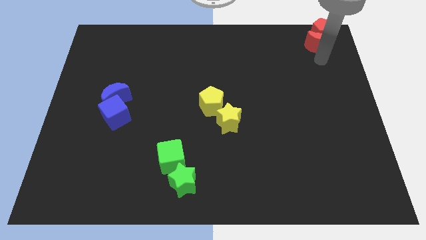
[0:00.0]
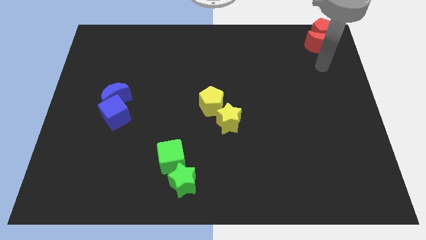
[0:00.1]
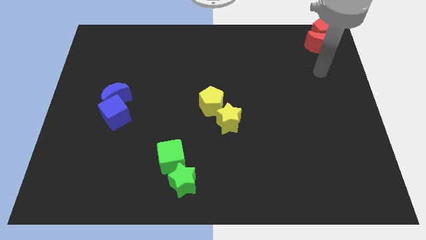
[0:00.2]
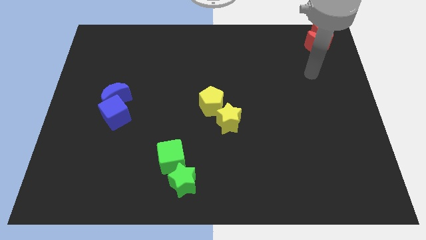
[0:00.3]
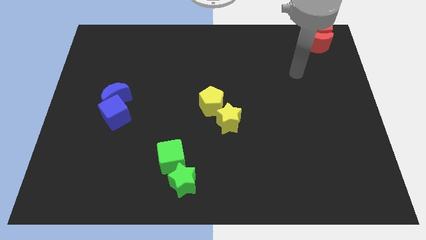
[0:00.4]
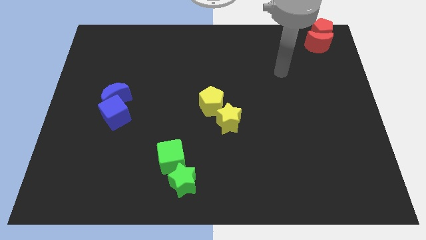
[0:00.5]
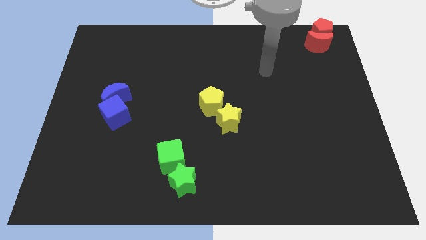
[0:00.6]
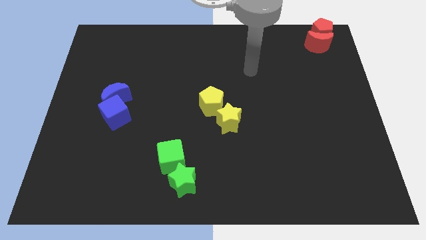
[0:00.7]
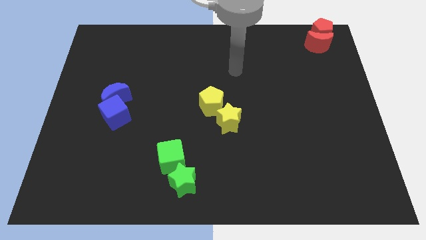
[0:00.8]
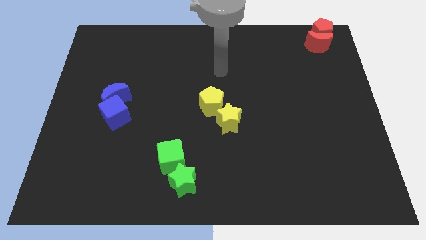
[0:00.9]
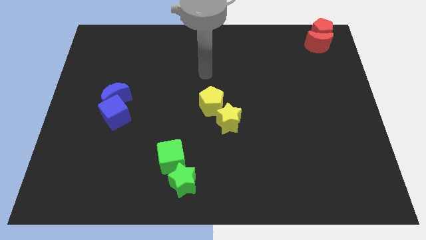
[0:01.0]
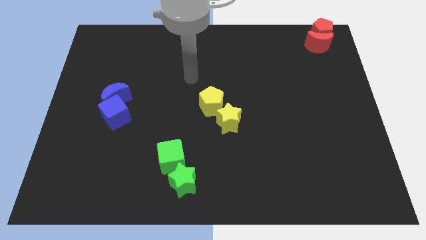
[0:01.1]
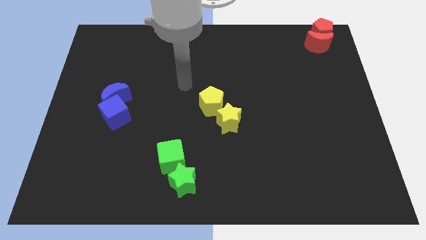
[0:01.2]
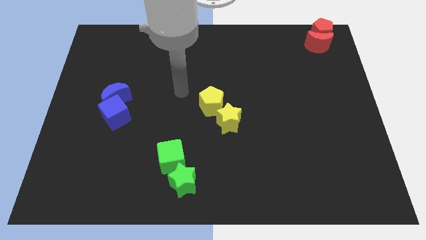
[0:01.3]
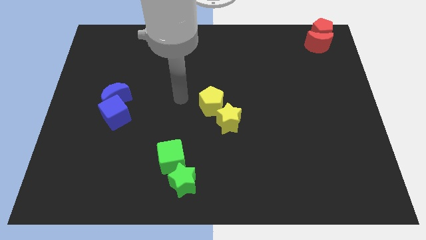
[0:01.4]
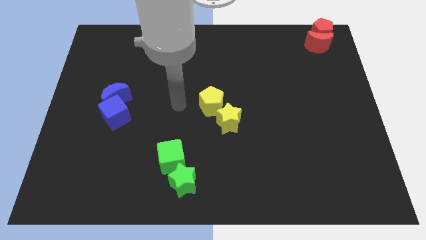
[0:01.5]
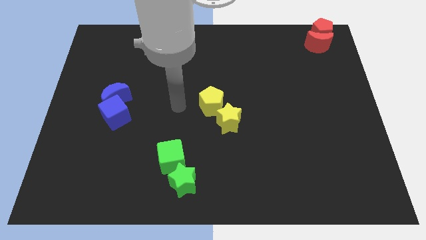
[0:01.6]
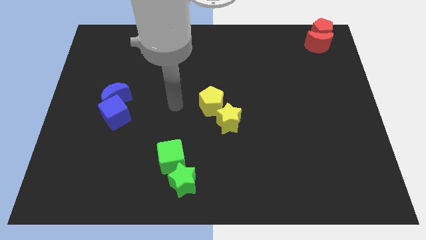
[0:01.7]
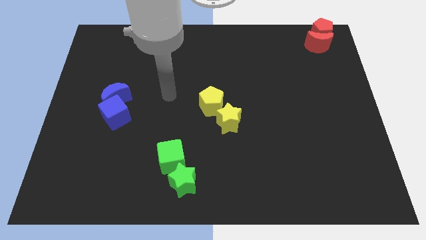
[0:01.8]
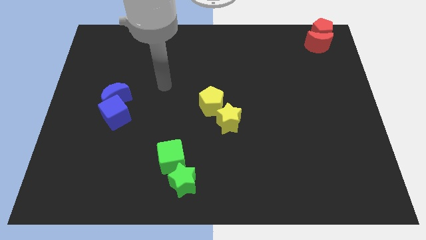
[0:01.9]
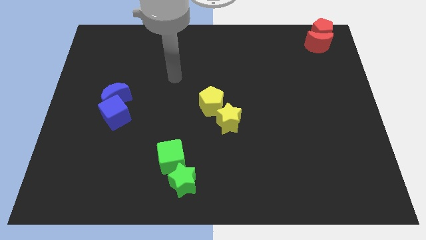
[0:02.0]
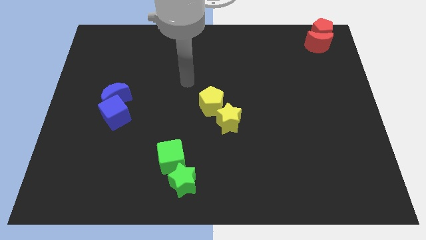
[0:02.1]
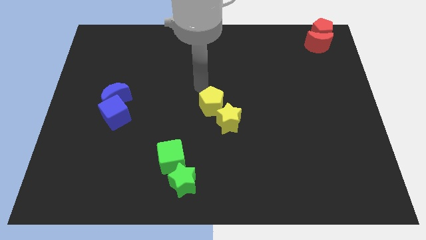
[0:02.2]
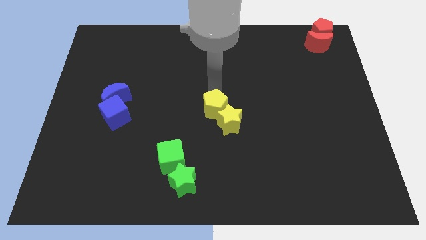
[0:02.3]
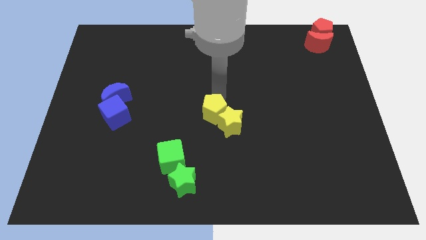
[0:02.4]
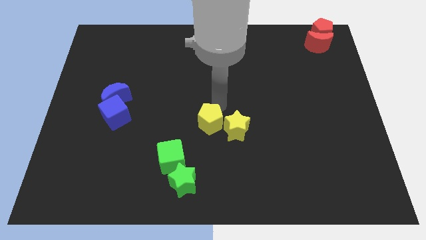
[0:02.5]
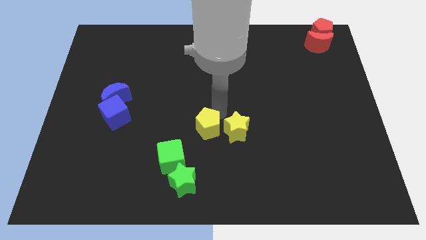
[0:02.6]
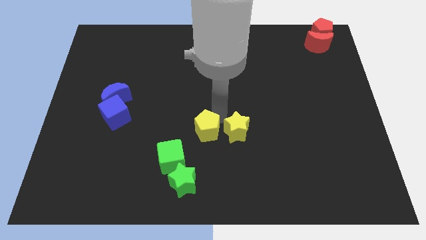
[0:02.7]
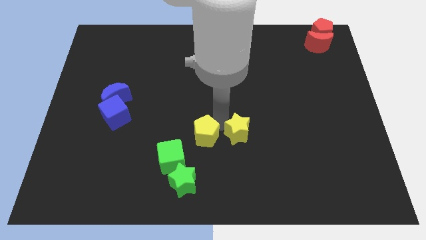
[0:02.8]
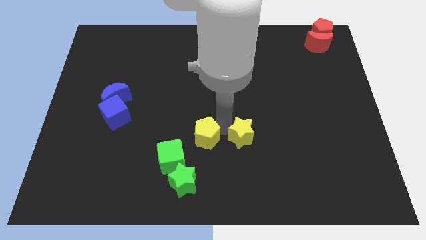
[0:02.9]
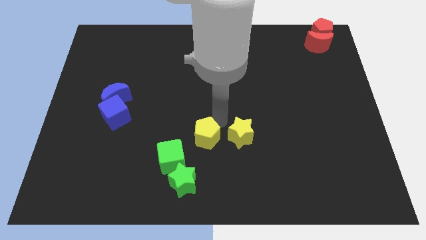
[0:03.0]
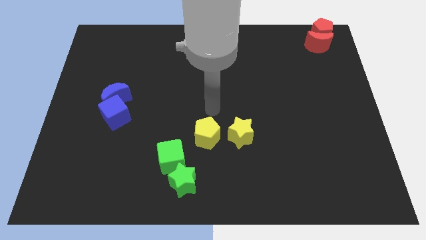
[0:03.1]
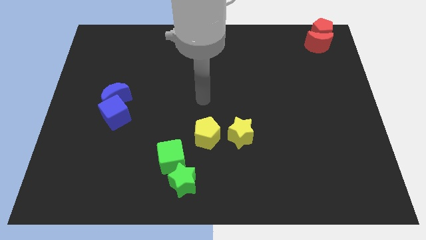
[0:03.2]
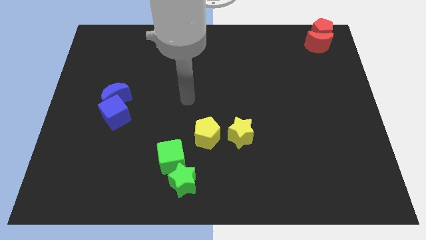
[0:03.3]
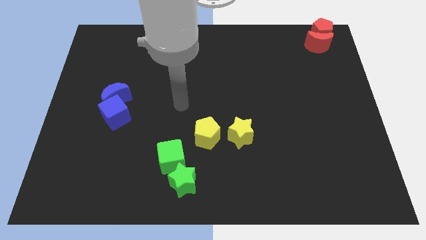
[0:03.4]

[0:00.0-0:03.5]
move the yellow blocks slightly to the bottom

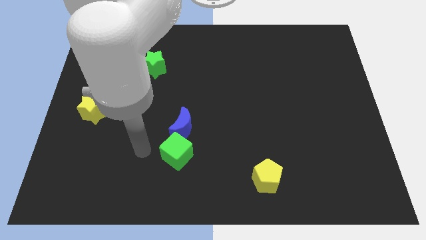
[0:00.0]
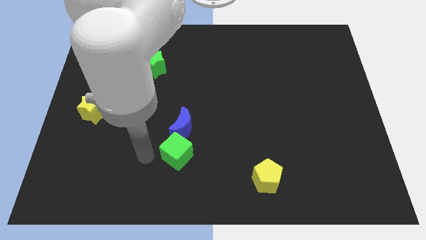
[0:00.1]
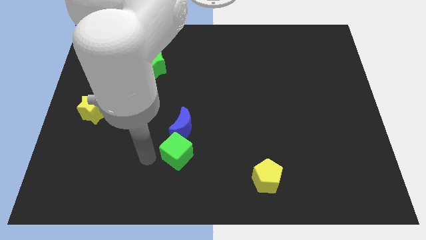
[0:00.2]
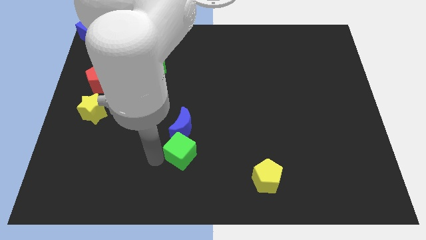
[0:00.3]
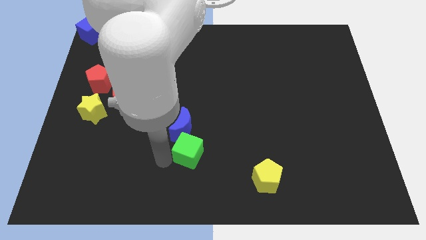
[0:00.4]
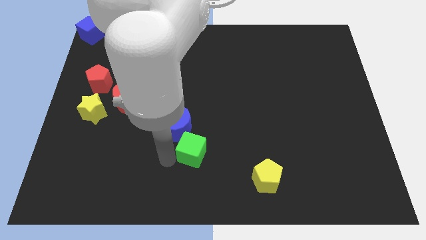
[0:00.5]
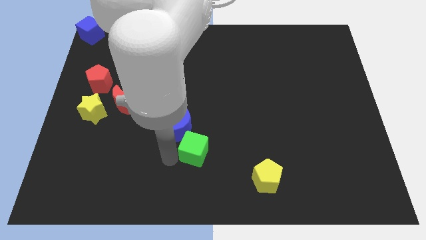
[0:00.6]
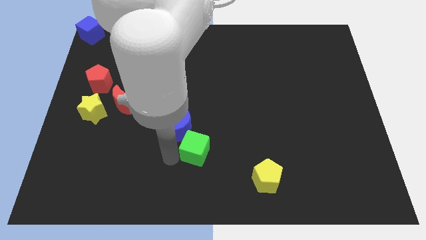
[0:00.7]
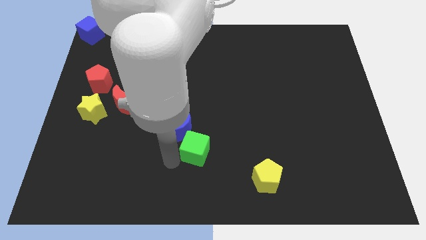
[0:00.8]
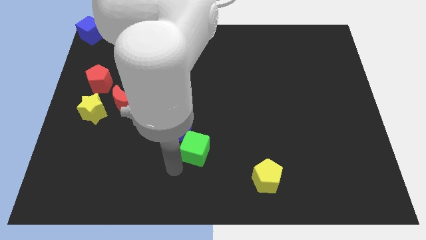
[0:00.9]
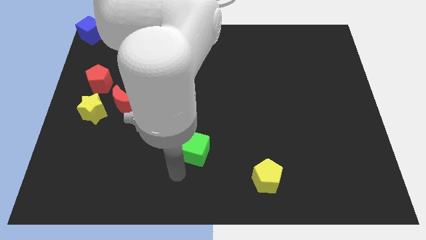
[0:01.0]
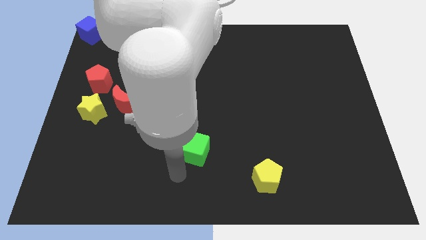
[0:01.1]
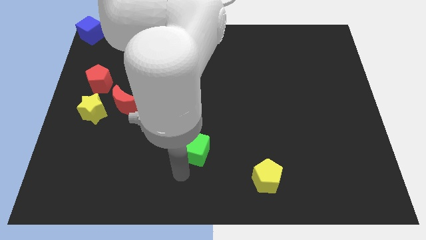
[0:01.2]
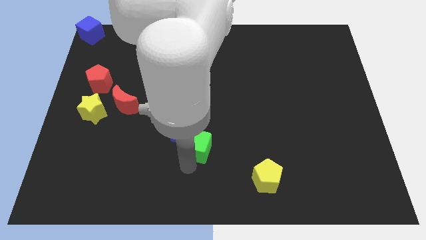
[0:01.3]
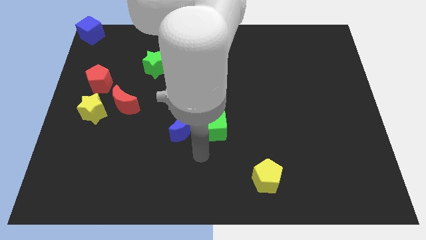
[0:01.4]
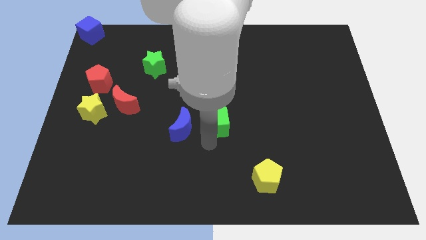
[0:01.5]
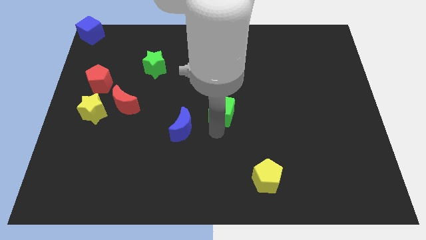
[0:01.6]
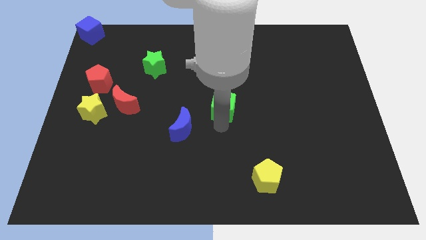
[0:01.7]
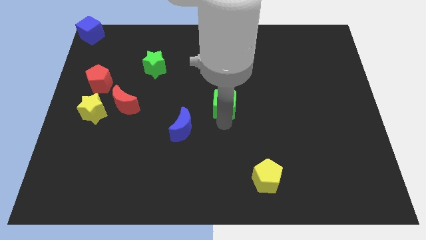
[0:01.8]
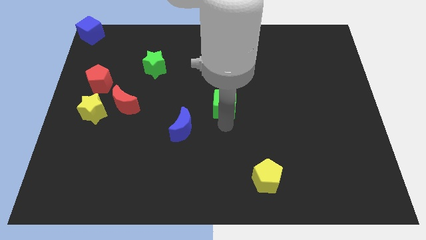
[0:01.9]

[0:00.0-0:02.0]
push the green cube to the top of the board

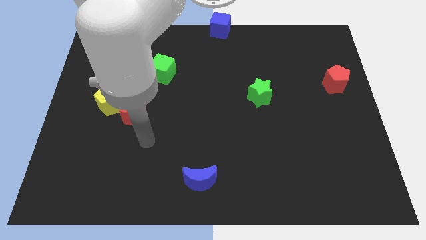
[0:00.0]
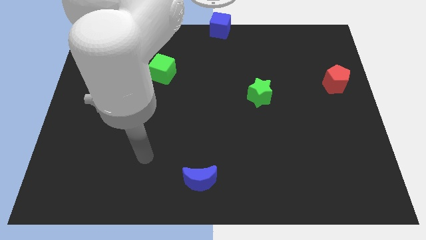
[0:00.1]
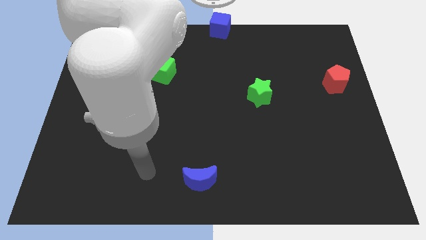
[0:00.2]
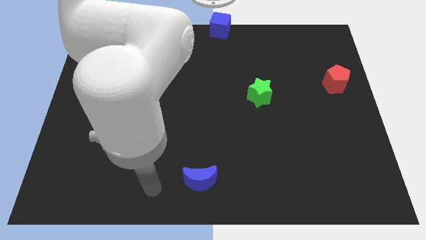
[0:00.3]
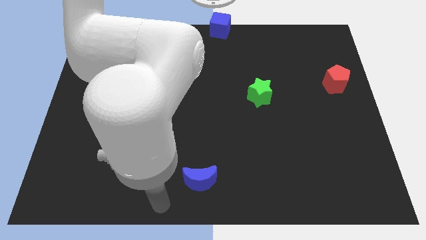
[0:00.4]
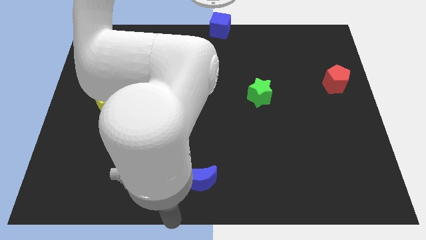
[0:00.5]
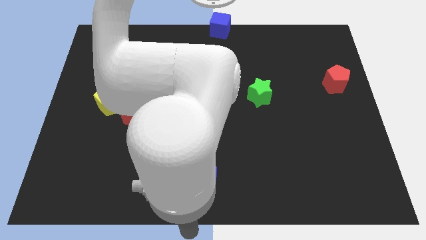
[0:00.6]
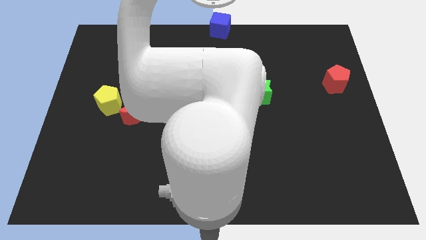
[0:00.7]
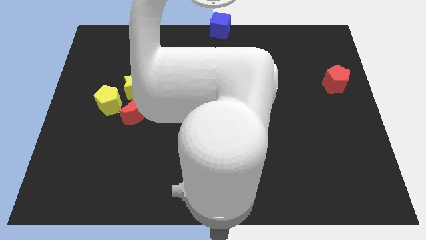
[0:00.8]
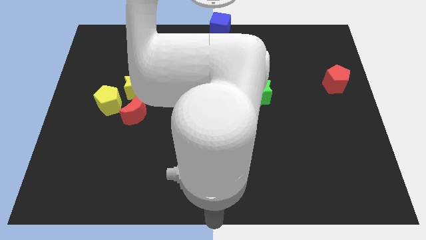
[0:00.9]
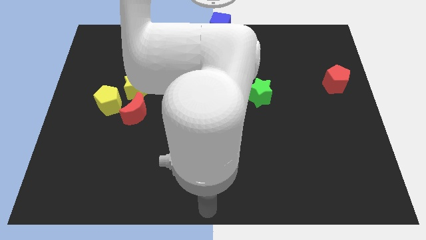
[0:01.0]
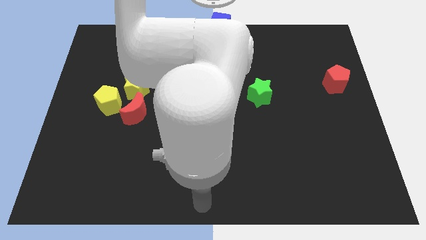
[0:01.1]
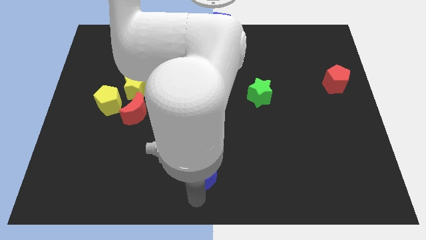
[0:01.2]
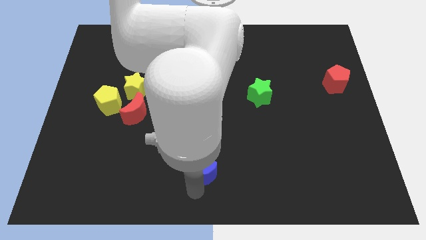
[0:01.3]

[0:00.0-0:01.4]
tap the blue crescent

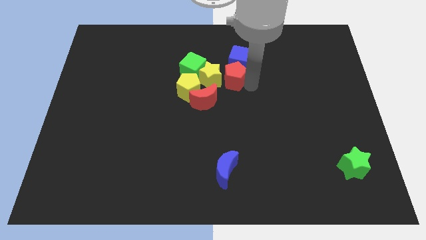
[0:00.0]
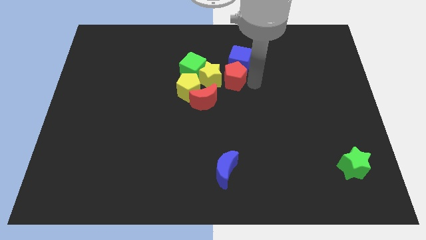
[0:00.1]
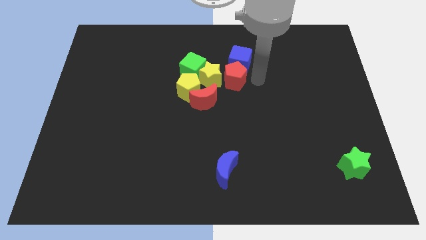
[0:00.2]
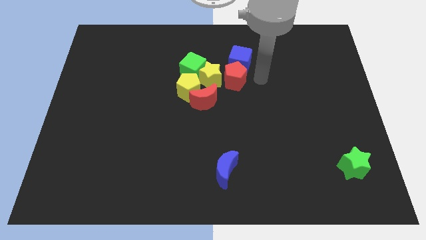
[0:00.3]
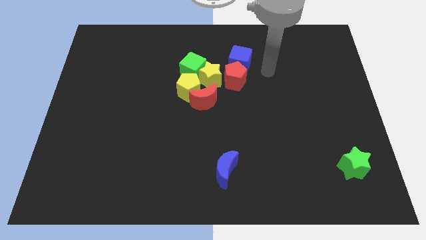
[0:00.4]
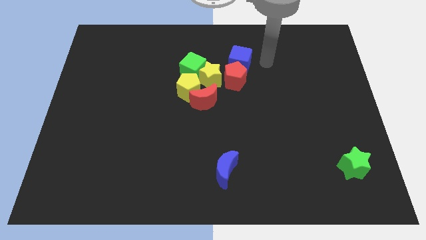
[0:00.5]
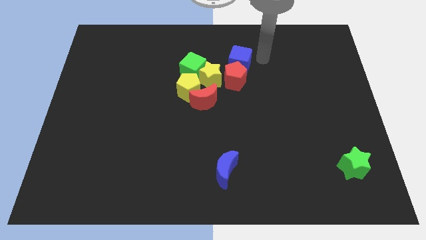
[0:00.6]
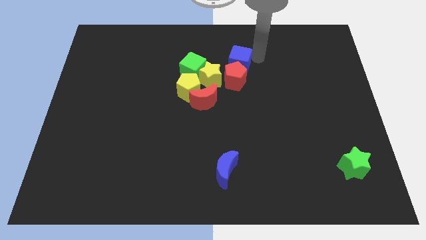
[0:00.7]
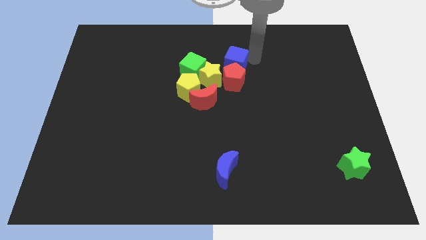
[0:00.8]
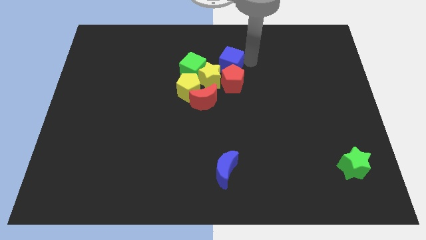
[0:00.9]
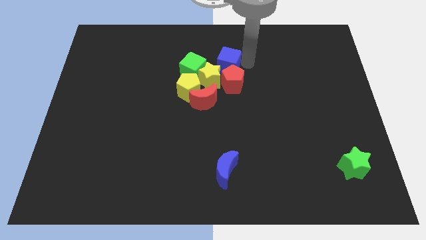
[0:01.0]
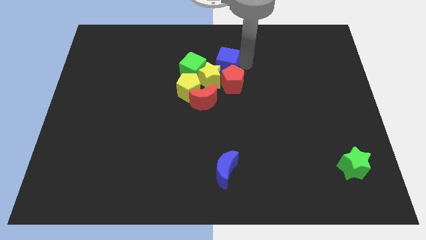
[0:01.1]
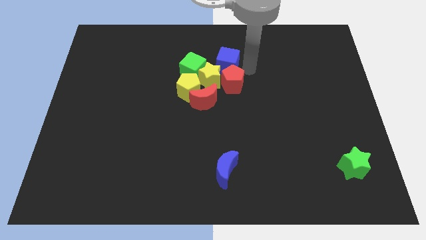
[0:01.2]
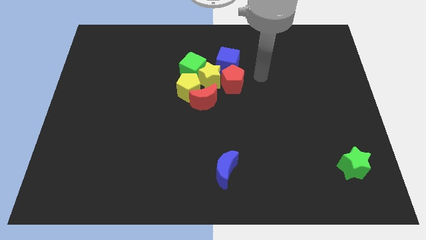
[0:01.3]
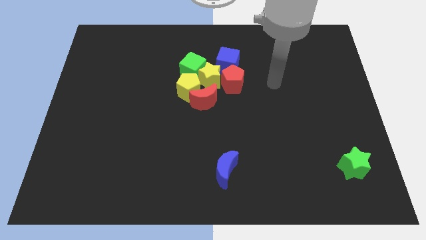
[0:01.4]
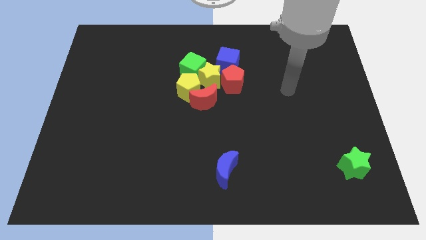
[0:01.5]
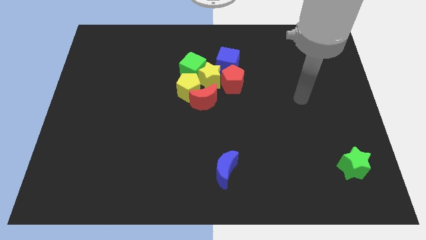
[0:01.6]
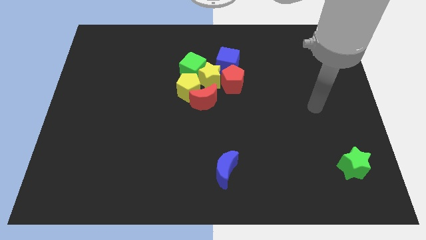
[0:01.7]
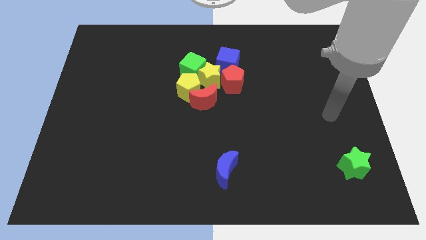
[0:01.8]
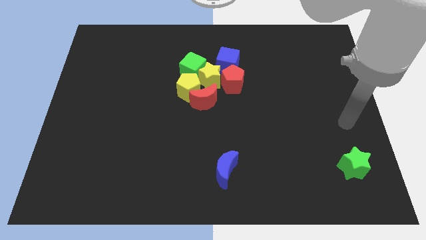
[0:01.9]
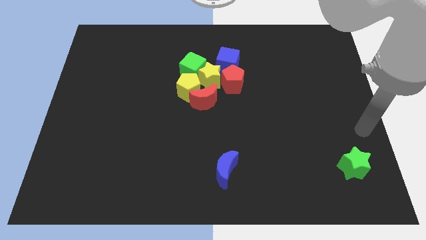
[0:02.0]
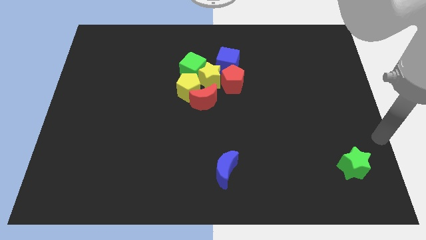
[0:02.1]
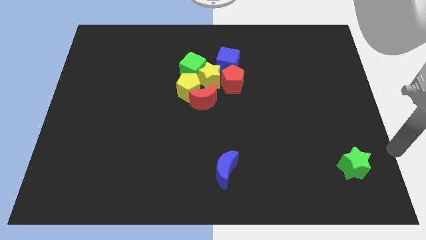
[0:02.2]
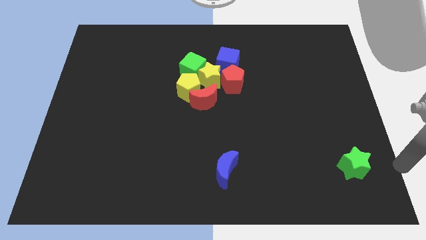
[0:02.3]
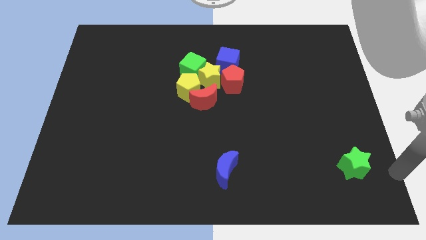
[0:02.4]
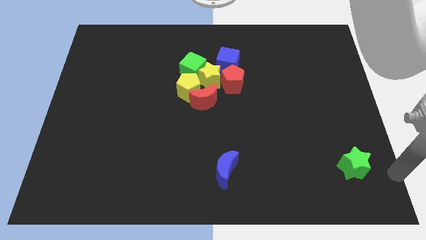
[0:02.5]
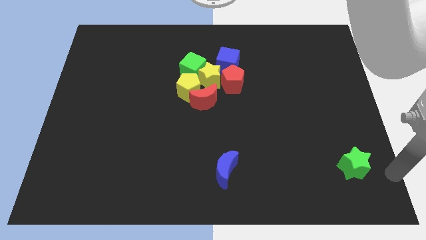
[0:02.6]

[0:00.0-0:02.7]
make the blue cube to touch the yellow star
